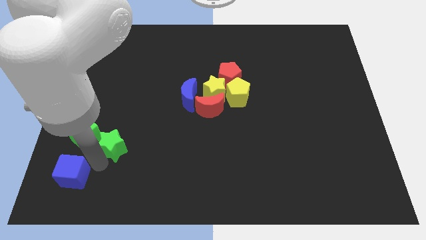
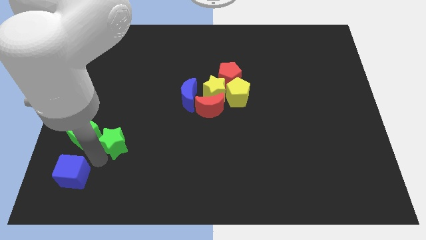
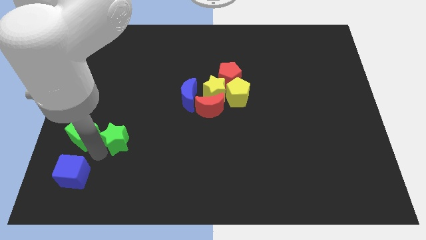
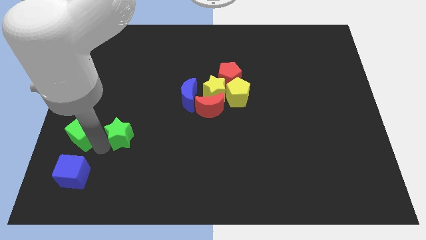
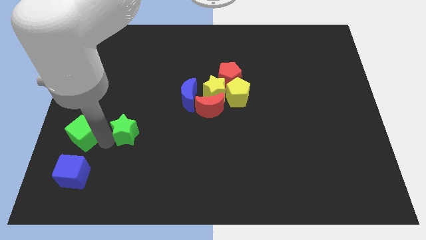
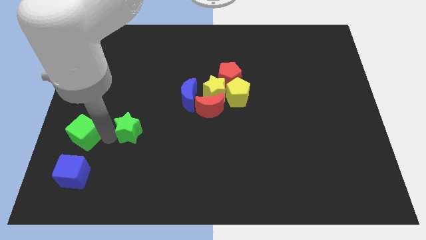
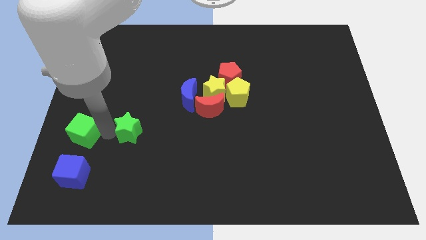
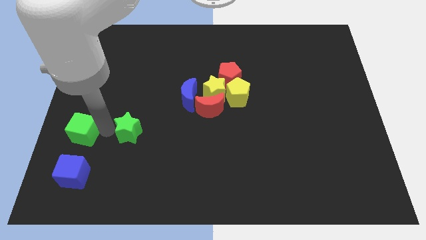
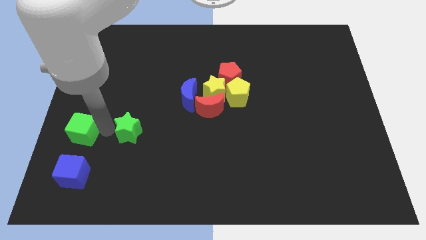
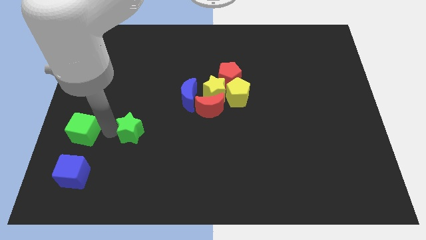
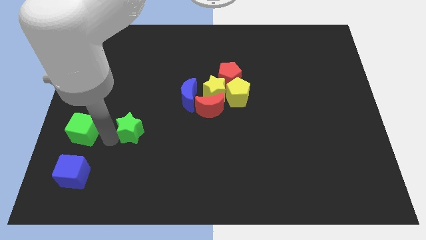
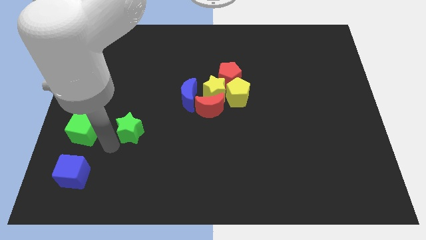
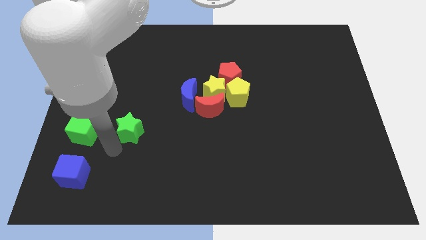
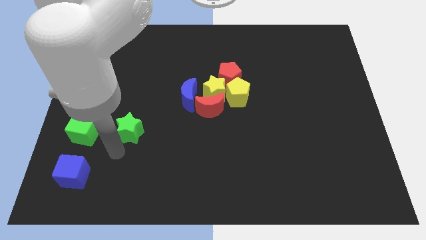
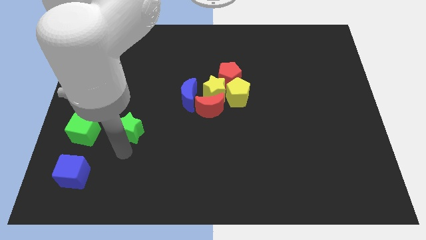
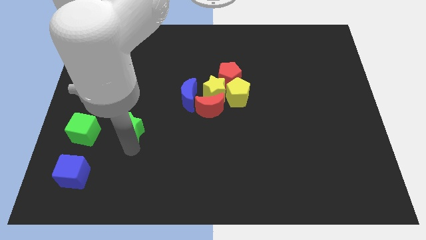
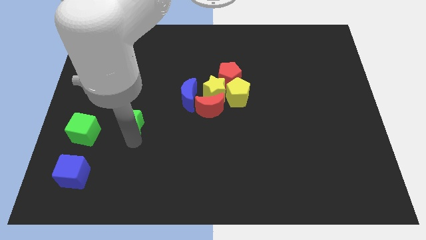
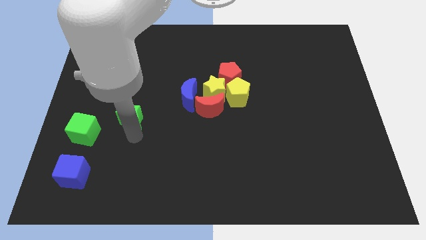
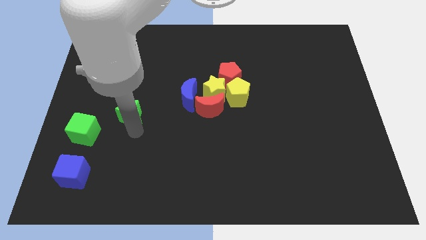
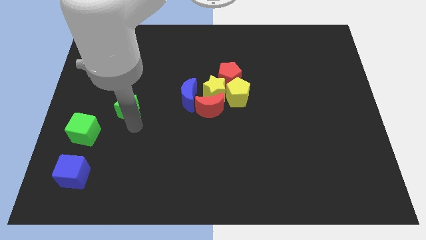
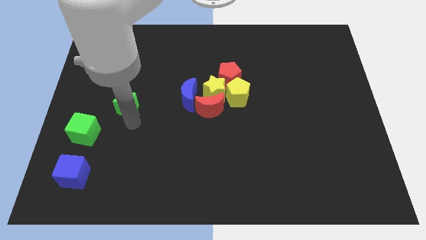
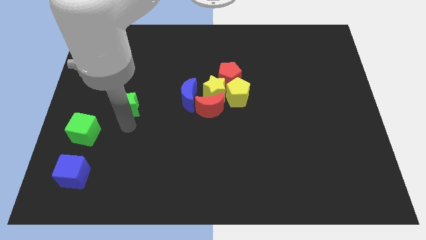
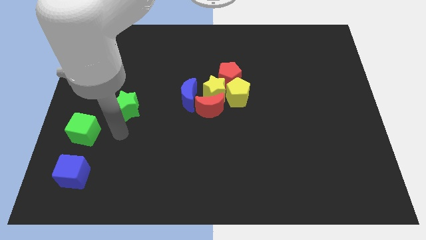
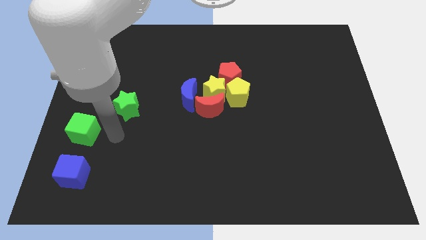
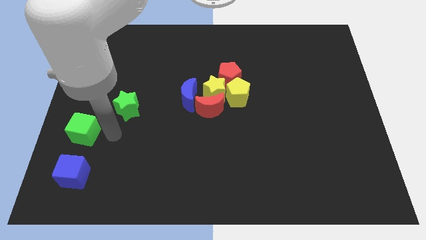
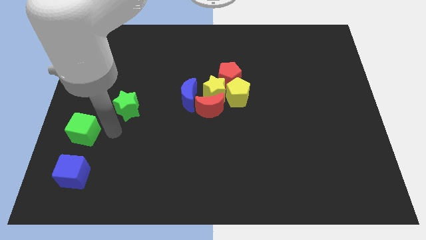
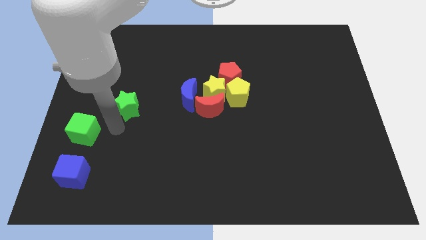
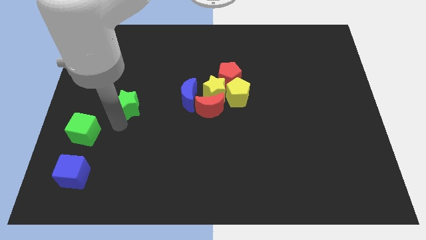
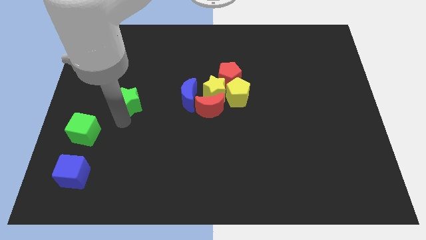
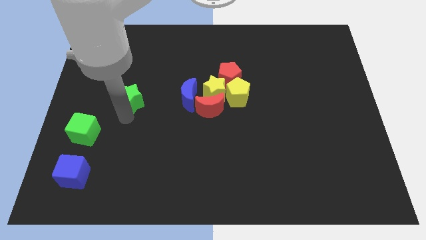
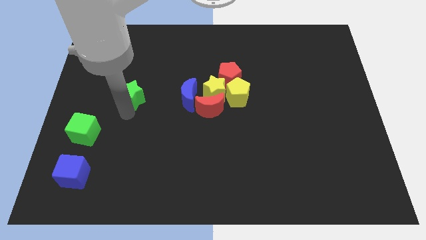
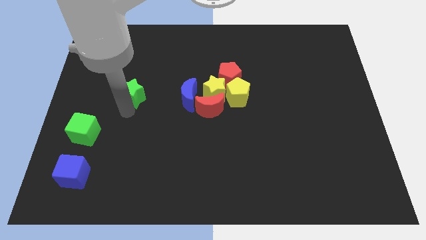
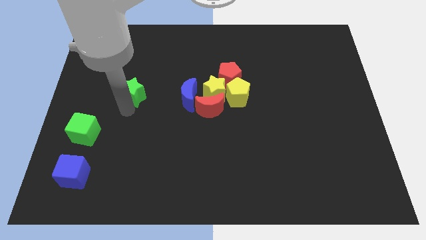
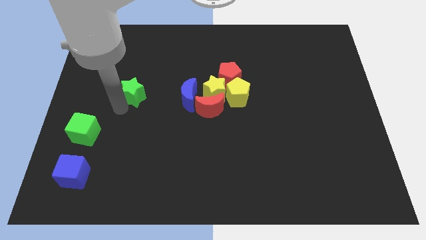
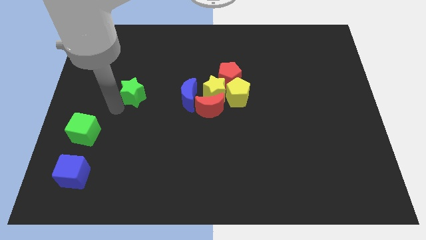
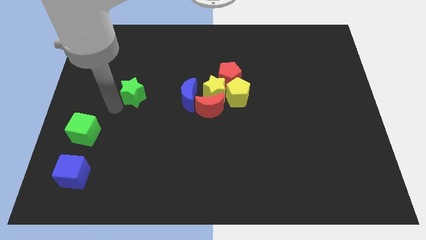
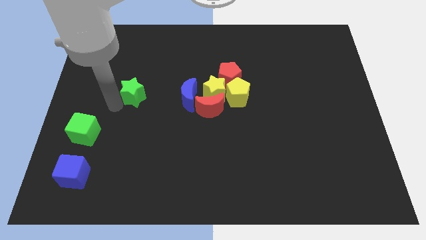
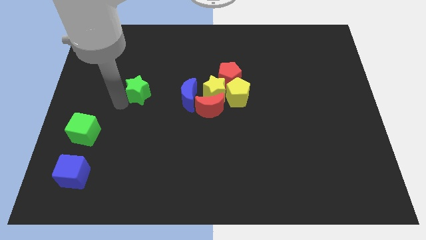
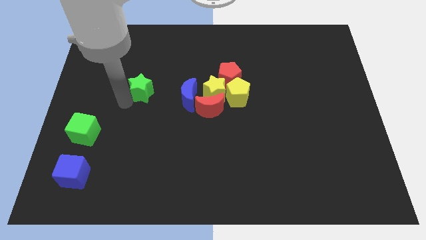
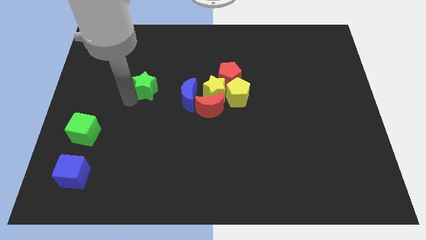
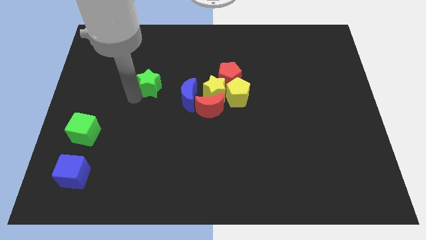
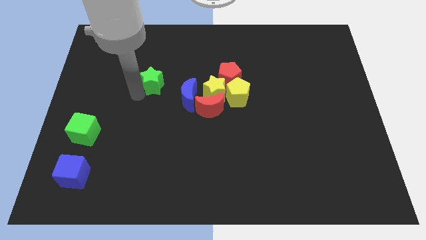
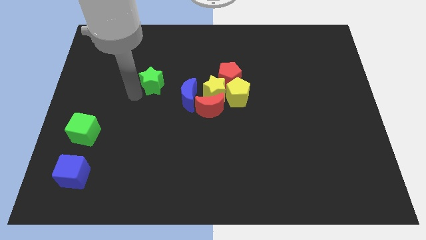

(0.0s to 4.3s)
push green star and green cube apart

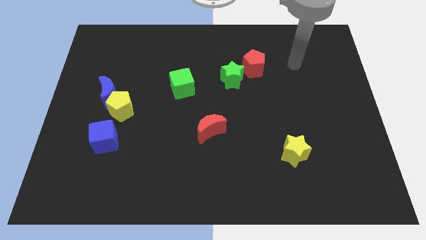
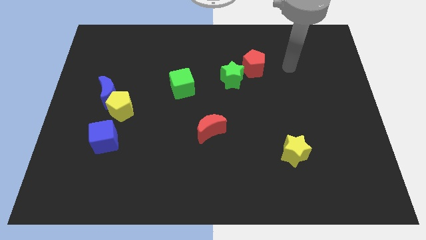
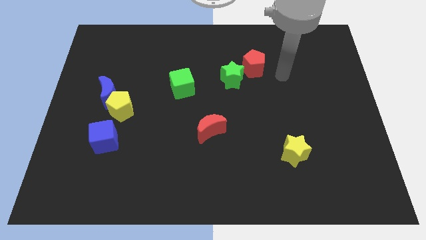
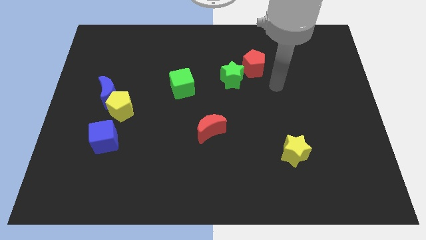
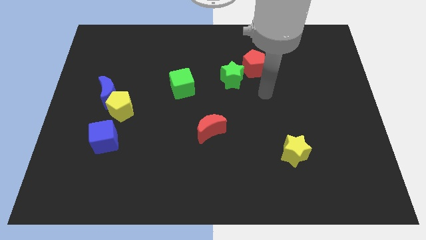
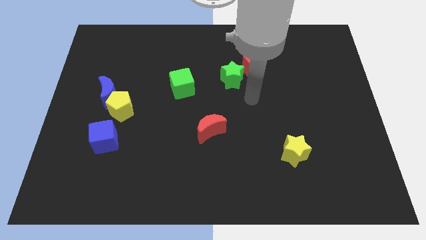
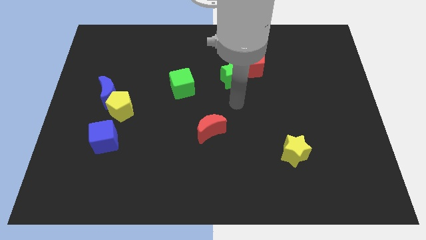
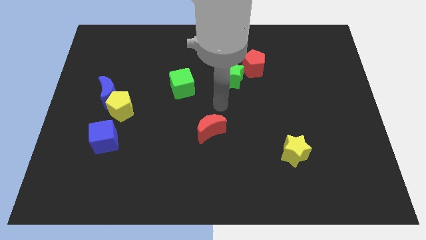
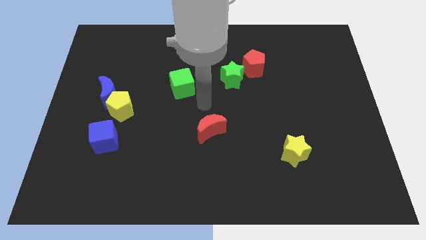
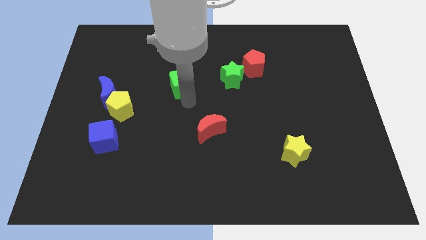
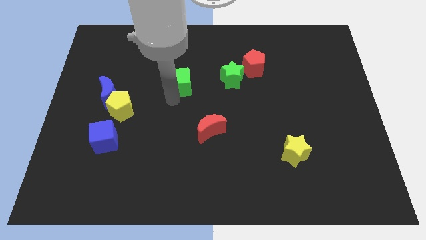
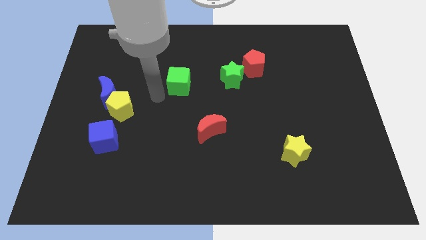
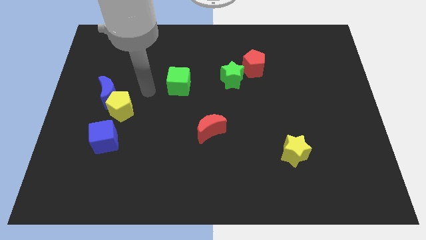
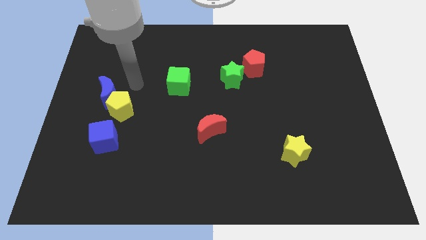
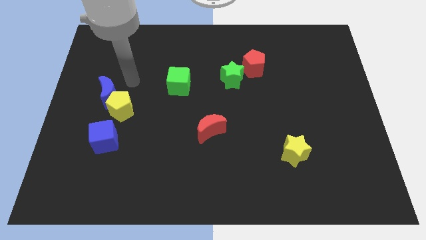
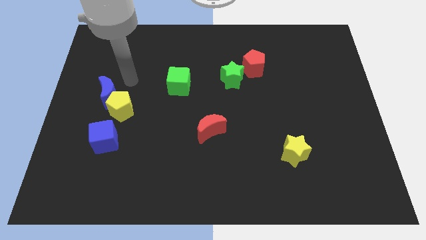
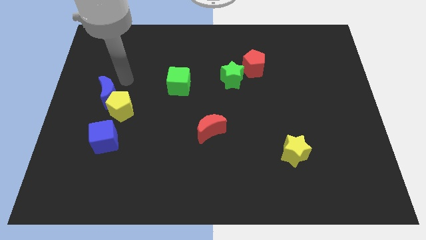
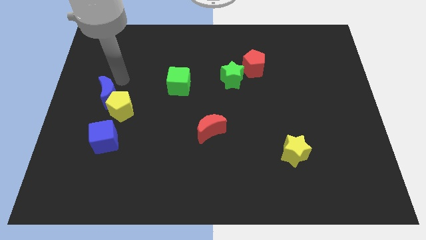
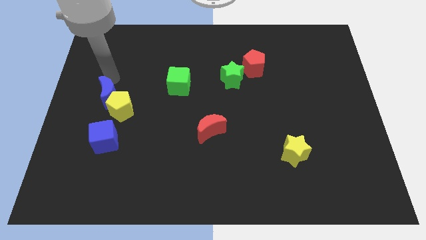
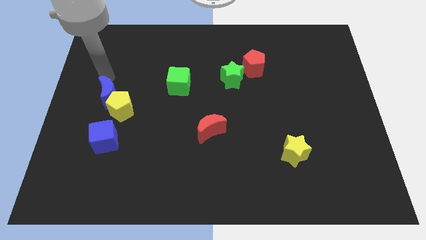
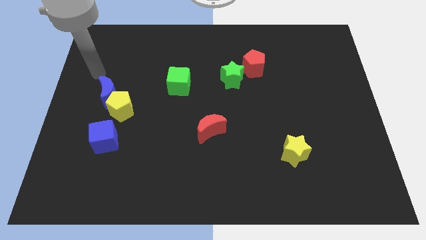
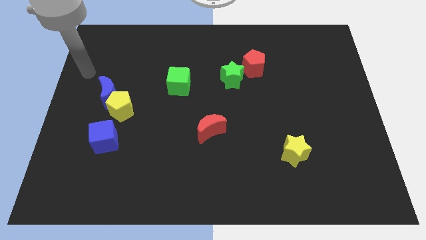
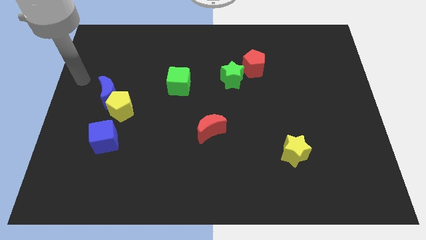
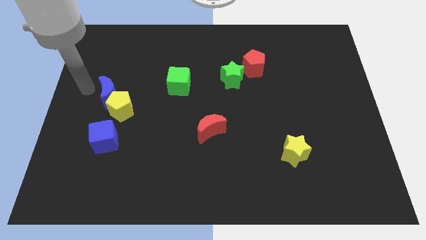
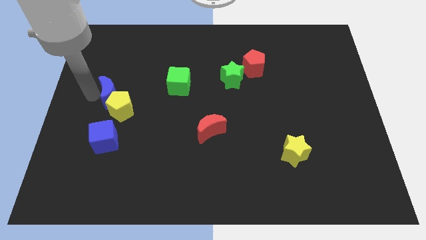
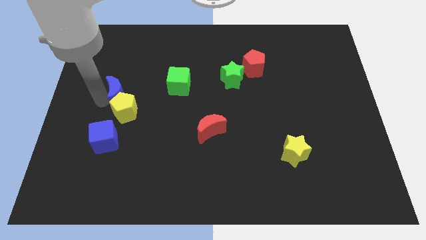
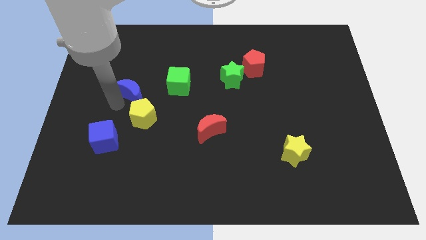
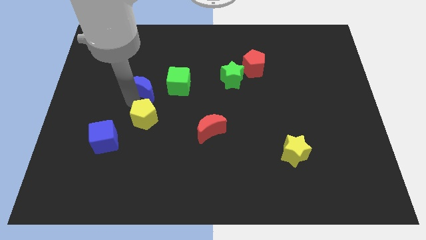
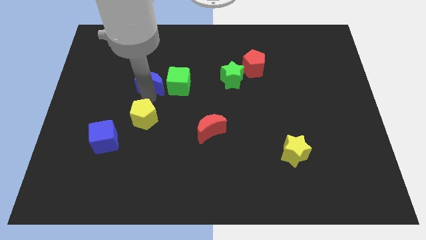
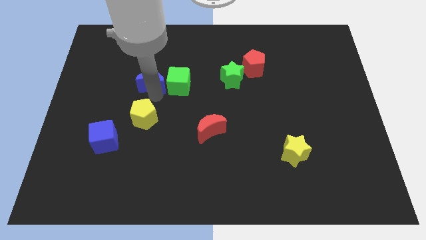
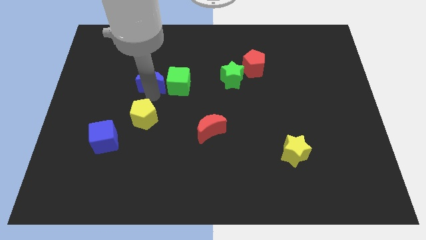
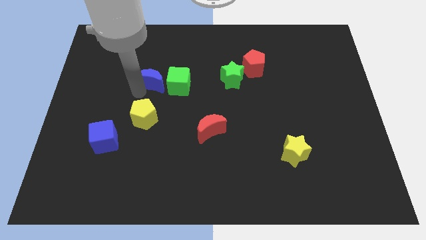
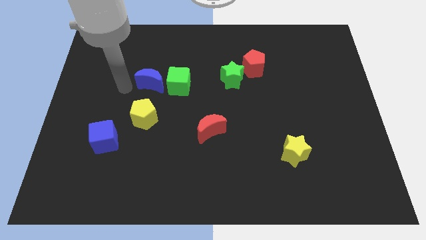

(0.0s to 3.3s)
move the blue moon to the left of the green cube

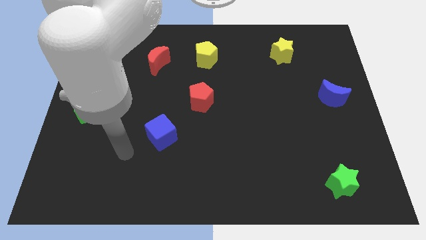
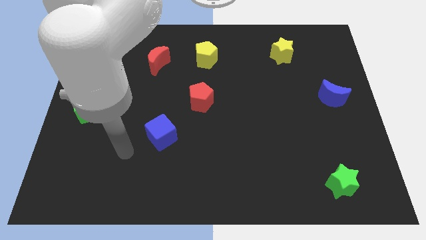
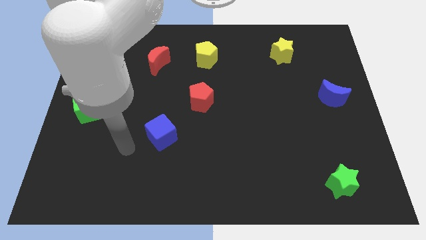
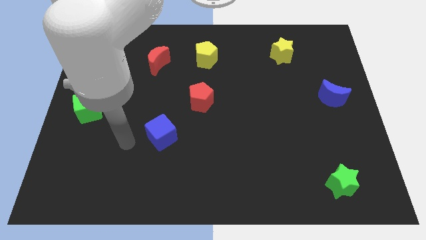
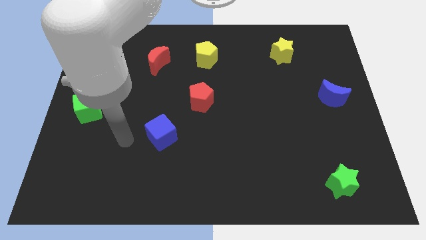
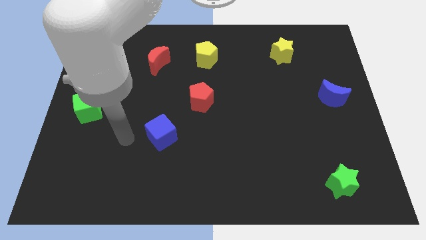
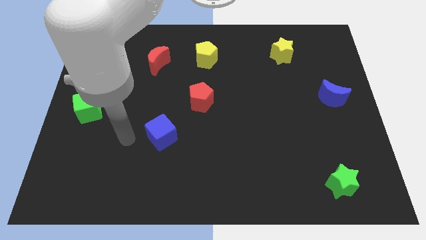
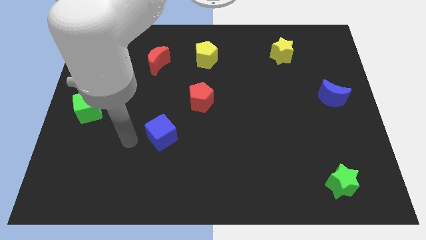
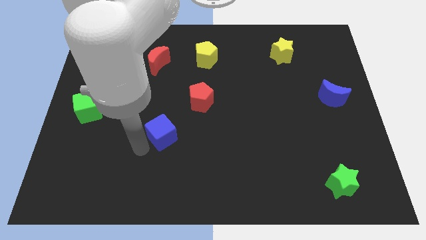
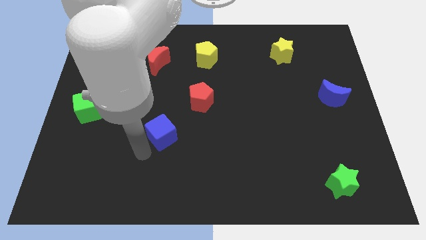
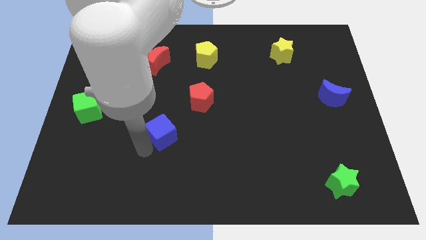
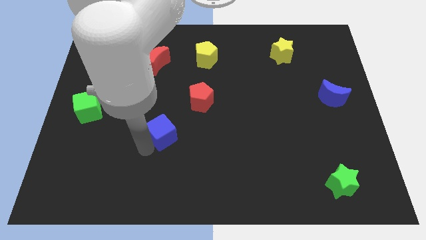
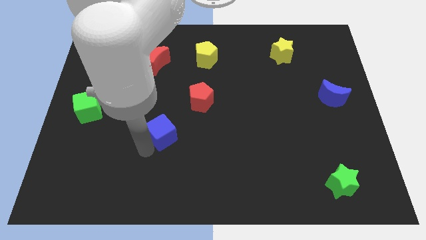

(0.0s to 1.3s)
move the arm close to the blue cube

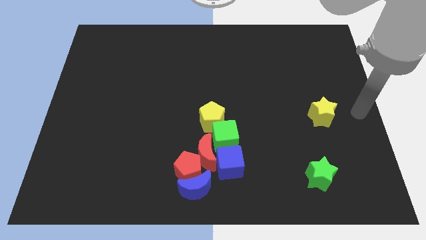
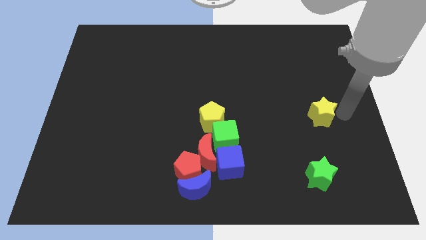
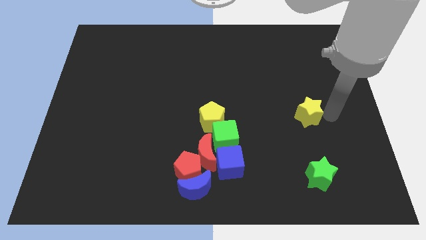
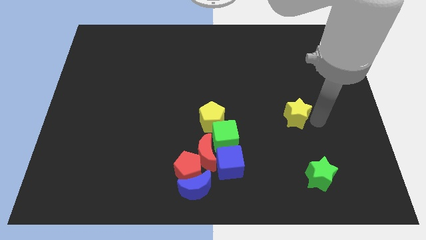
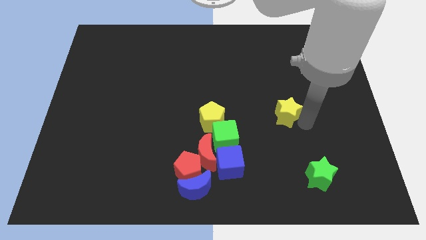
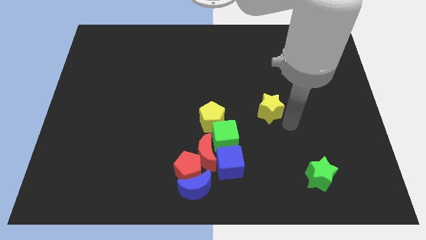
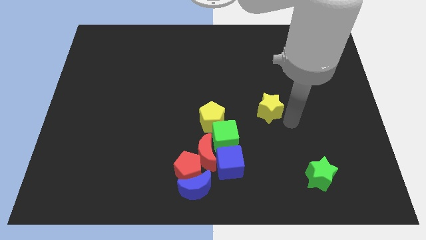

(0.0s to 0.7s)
slide yellow star towards the yellow pentagon
